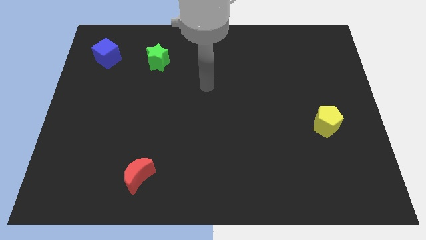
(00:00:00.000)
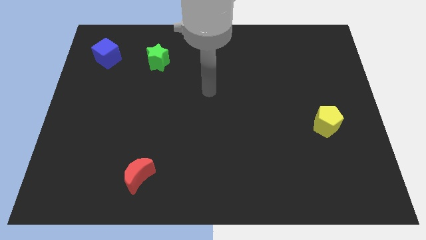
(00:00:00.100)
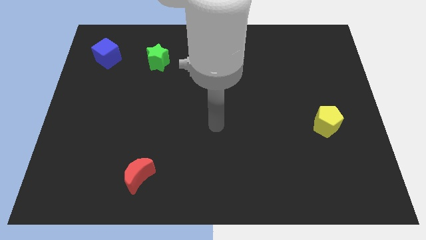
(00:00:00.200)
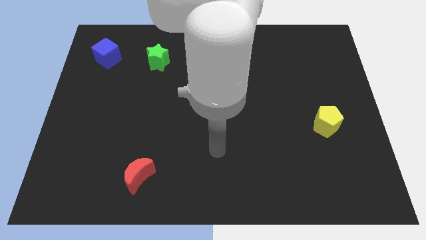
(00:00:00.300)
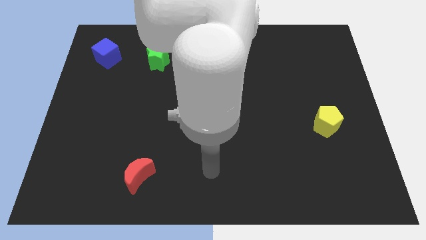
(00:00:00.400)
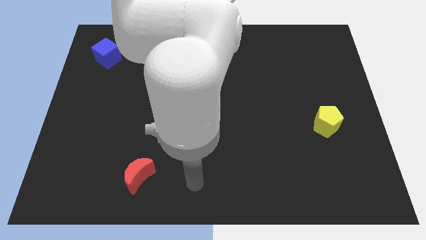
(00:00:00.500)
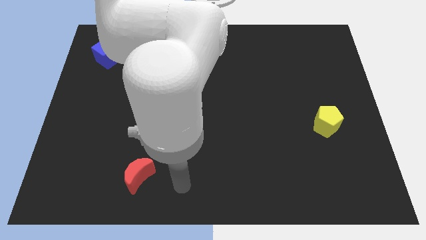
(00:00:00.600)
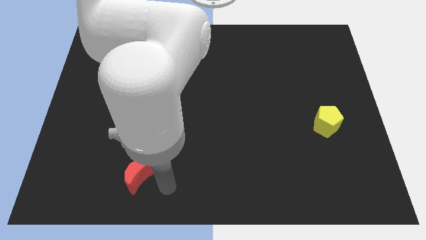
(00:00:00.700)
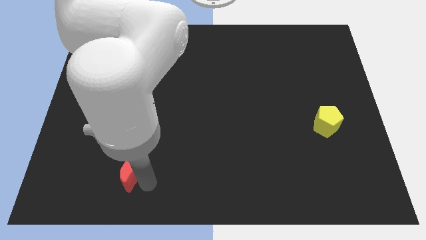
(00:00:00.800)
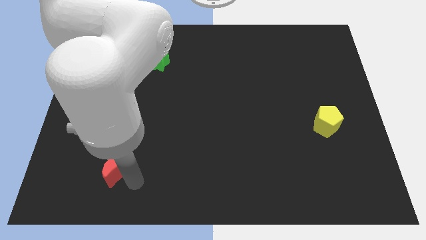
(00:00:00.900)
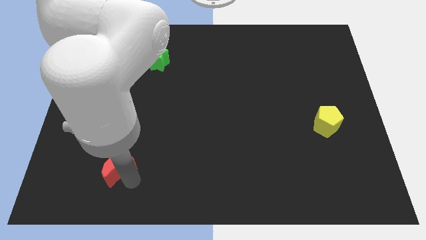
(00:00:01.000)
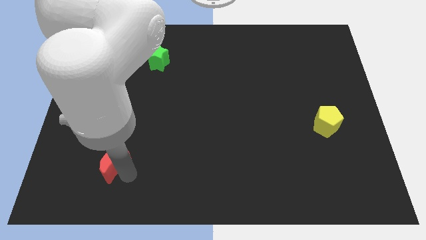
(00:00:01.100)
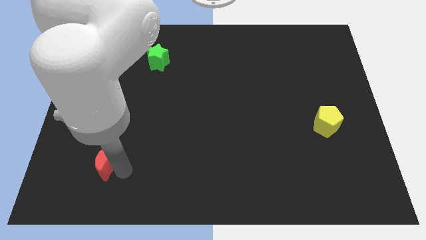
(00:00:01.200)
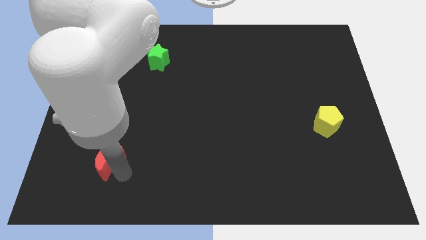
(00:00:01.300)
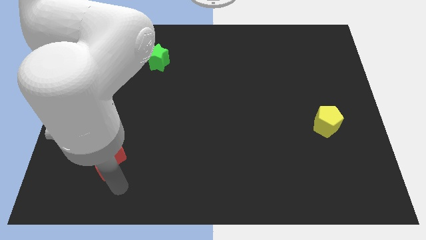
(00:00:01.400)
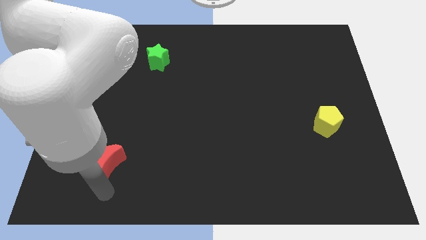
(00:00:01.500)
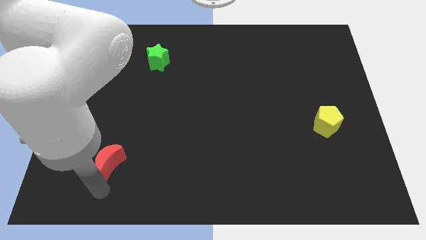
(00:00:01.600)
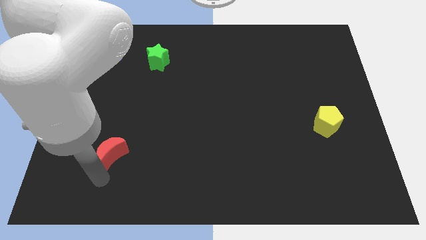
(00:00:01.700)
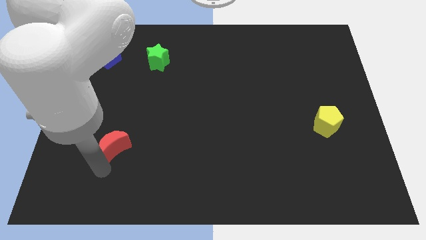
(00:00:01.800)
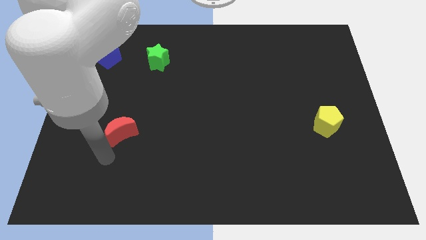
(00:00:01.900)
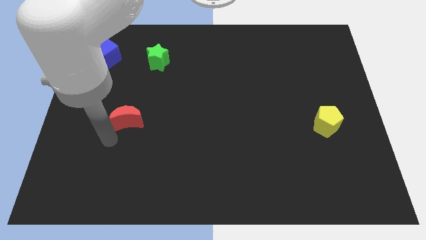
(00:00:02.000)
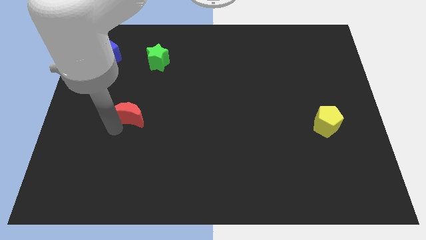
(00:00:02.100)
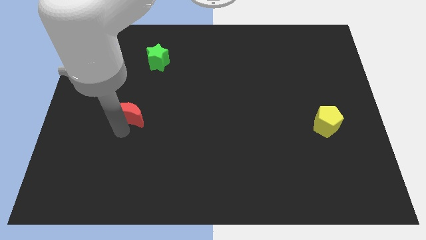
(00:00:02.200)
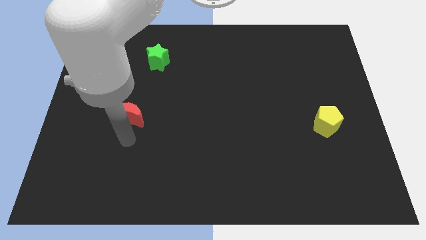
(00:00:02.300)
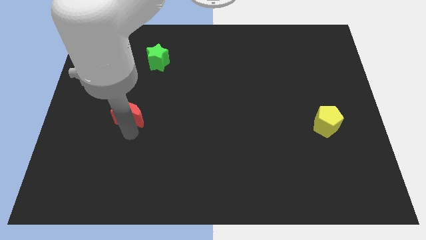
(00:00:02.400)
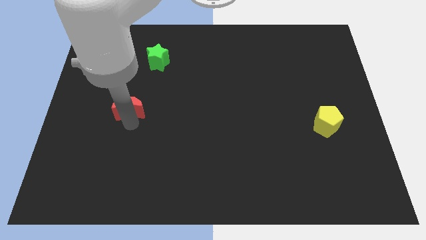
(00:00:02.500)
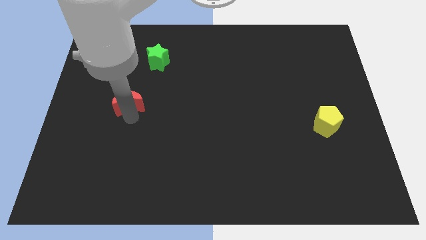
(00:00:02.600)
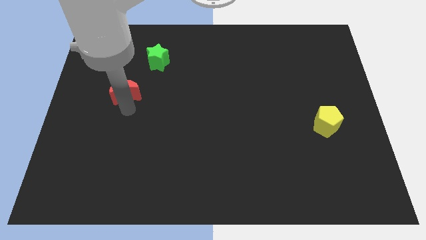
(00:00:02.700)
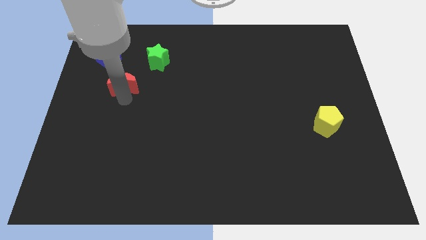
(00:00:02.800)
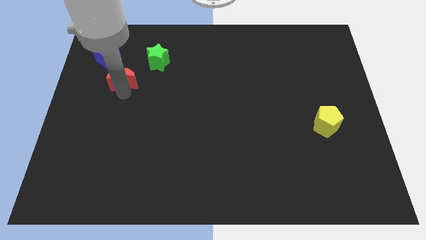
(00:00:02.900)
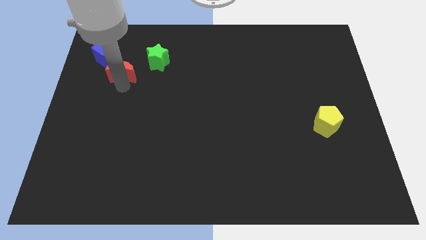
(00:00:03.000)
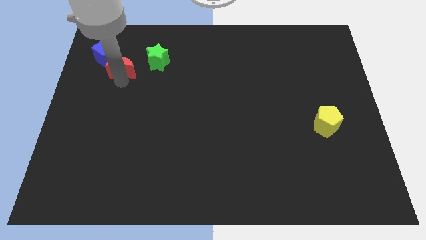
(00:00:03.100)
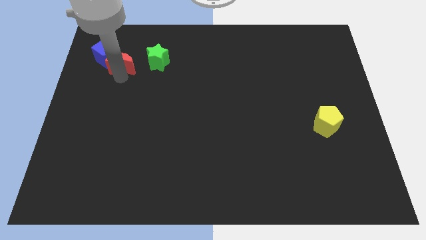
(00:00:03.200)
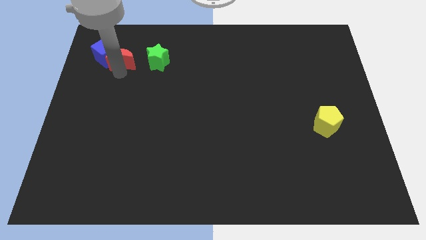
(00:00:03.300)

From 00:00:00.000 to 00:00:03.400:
push the red moon towards the blue block

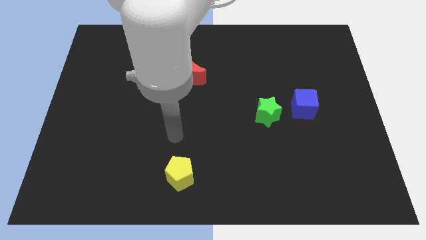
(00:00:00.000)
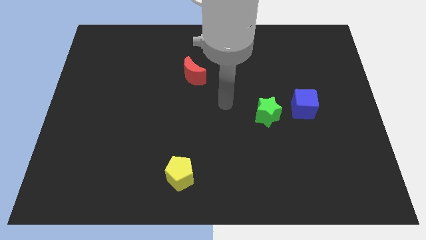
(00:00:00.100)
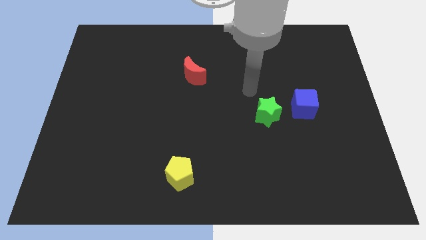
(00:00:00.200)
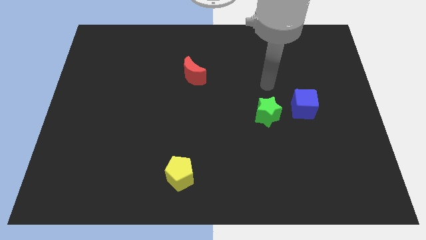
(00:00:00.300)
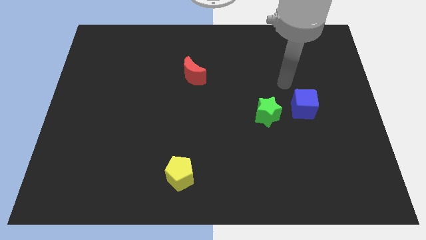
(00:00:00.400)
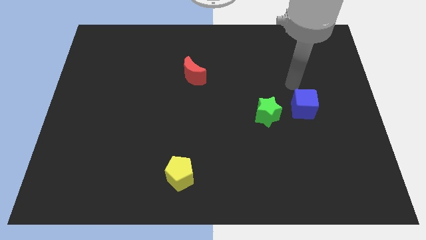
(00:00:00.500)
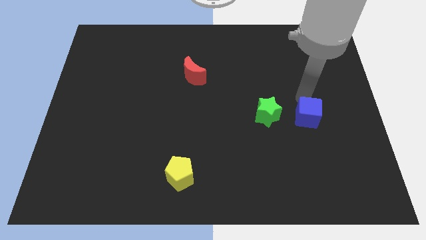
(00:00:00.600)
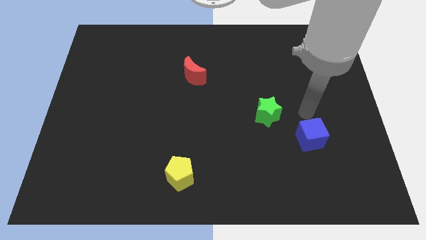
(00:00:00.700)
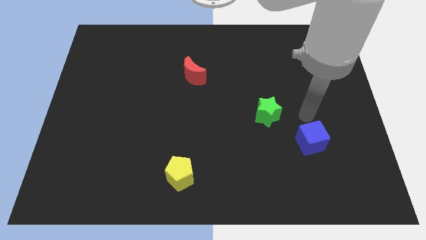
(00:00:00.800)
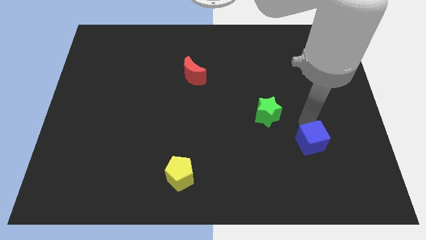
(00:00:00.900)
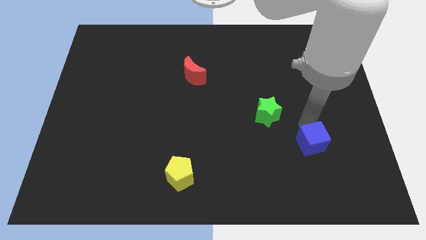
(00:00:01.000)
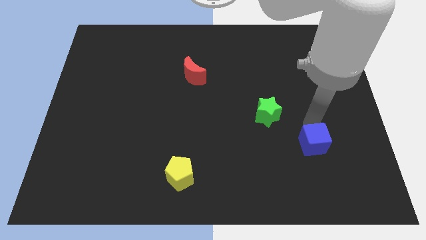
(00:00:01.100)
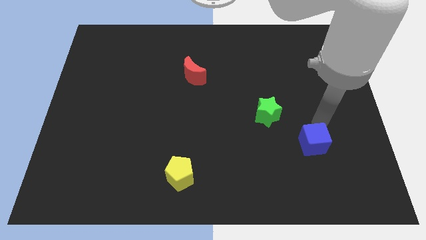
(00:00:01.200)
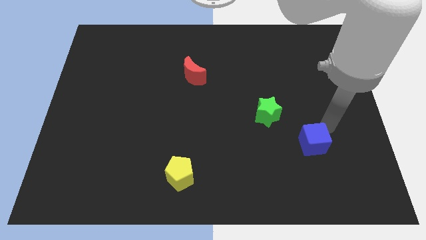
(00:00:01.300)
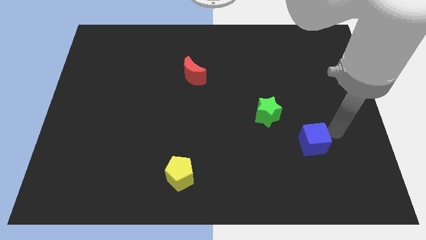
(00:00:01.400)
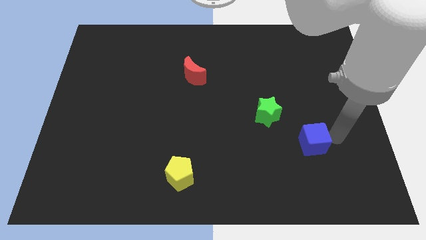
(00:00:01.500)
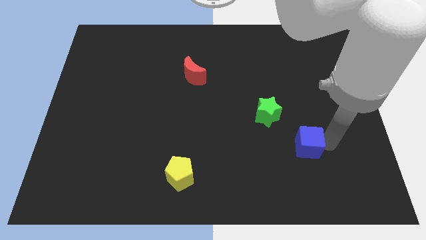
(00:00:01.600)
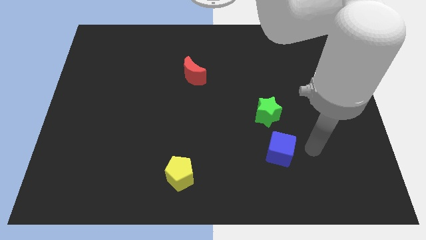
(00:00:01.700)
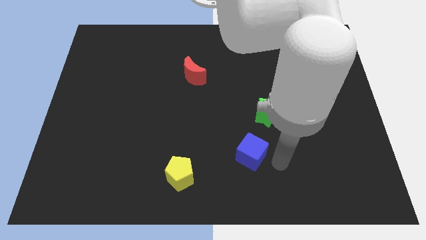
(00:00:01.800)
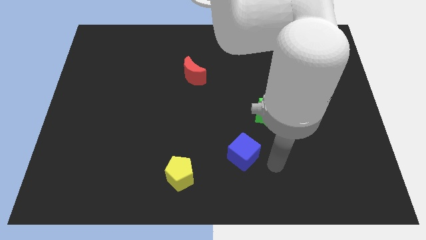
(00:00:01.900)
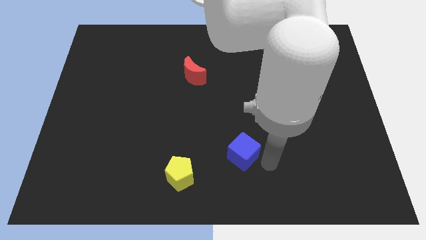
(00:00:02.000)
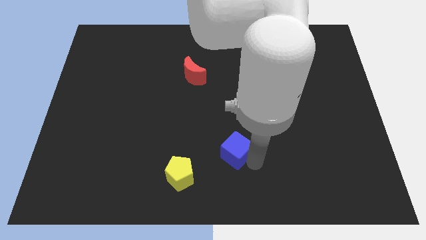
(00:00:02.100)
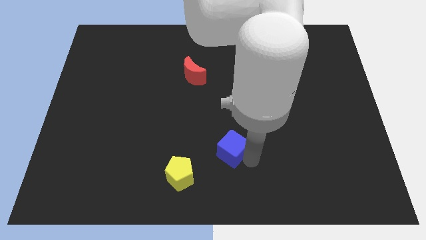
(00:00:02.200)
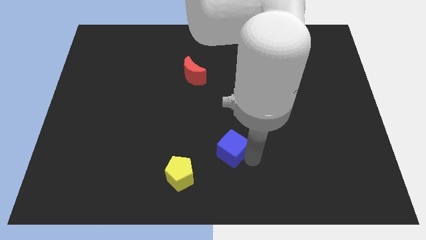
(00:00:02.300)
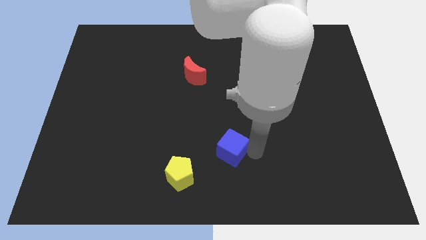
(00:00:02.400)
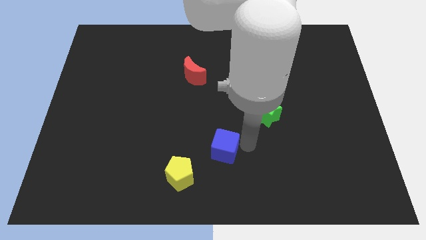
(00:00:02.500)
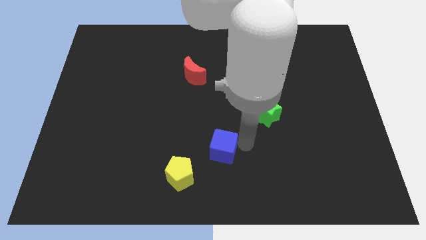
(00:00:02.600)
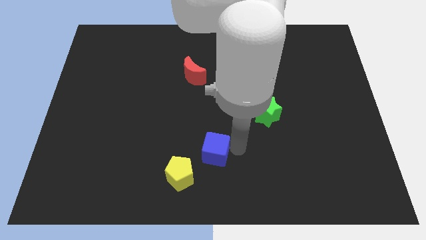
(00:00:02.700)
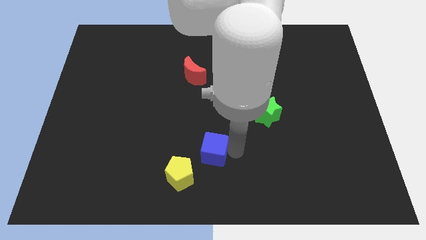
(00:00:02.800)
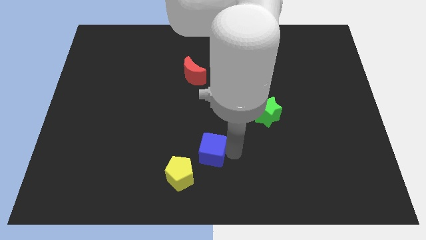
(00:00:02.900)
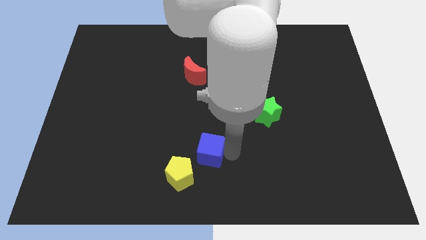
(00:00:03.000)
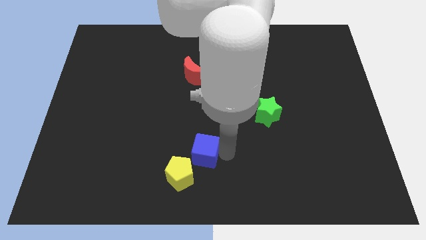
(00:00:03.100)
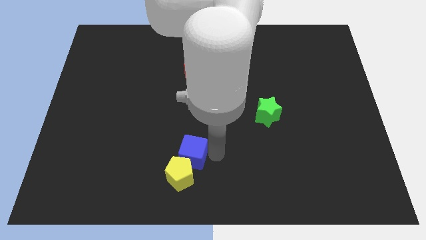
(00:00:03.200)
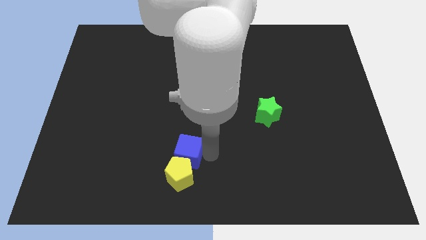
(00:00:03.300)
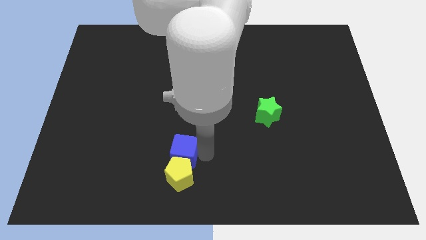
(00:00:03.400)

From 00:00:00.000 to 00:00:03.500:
push the blue block towards the pentagon

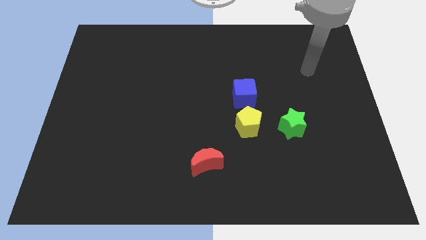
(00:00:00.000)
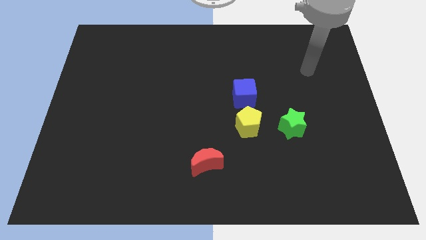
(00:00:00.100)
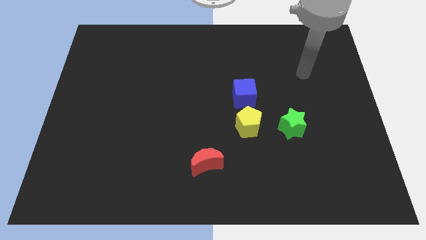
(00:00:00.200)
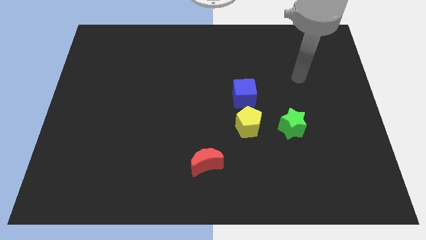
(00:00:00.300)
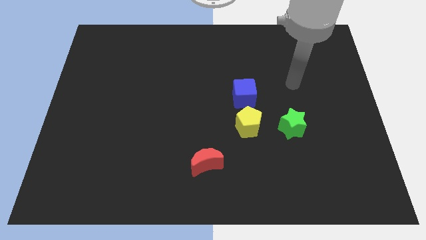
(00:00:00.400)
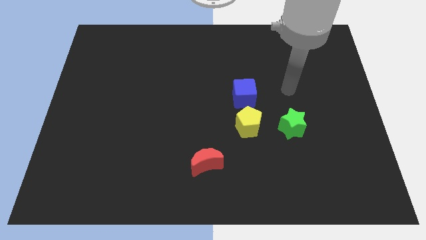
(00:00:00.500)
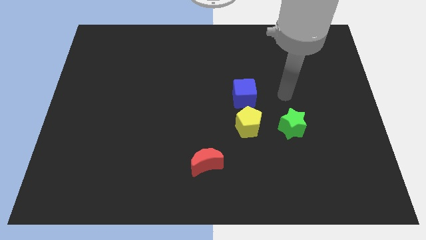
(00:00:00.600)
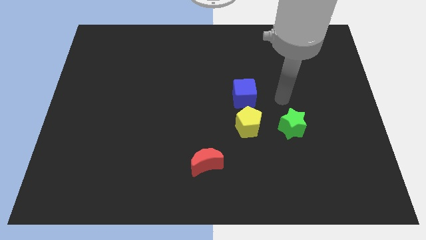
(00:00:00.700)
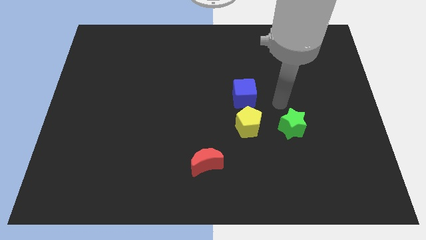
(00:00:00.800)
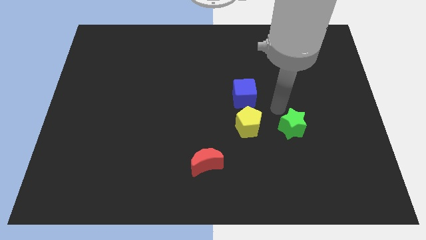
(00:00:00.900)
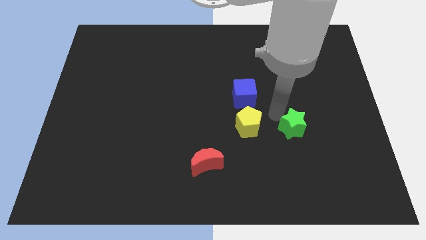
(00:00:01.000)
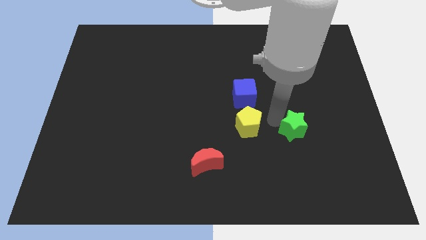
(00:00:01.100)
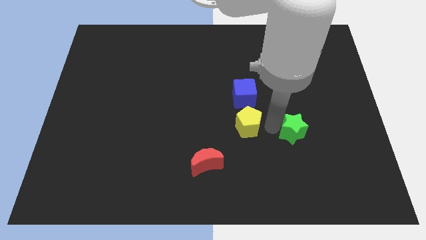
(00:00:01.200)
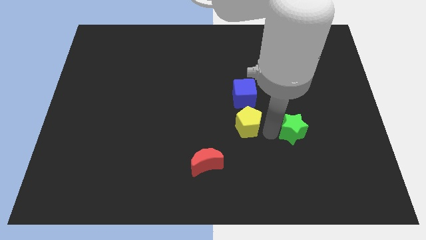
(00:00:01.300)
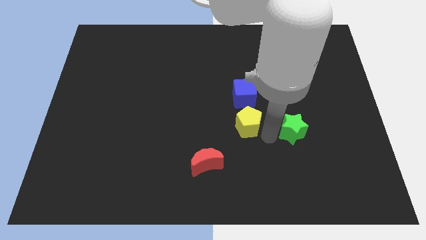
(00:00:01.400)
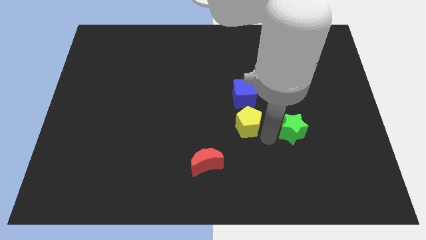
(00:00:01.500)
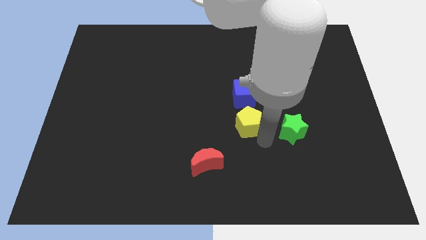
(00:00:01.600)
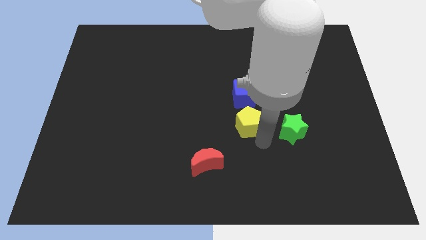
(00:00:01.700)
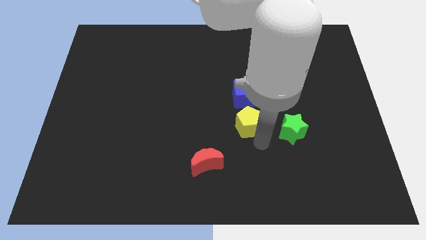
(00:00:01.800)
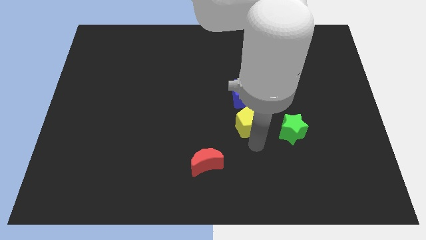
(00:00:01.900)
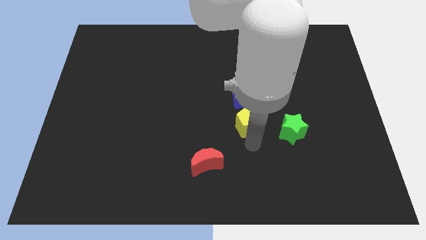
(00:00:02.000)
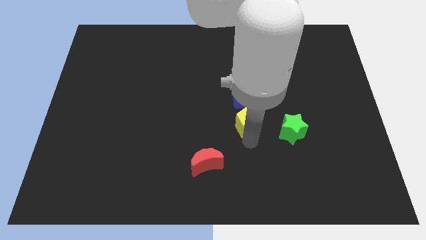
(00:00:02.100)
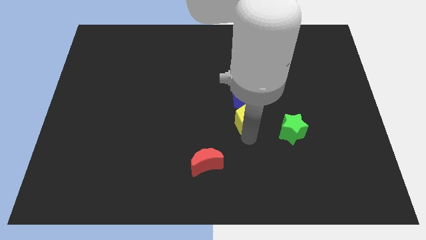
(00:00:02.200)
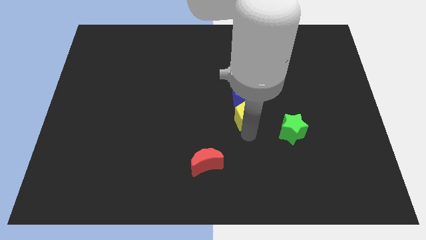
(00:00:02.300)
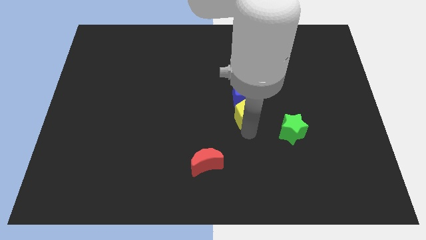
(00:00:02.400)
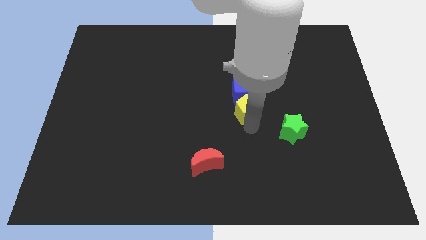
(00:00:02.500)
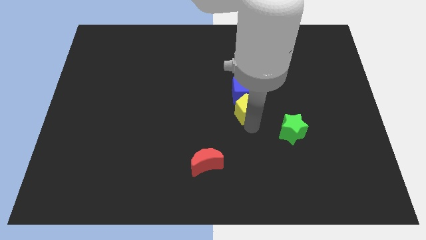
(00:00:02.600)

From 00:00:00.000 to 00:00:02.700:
move the yellow block to the blue block
